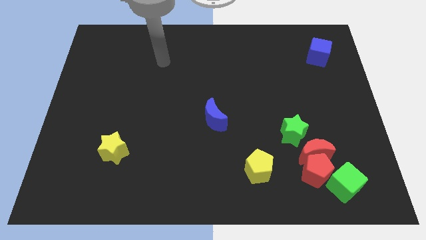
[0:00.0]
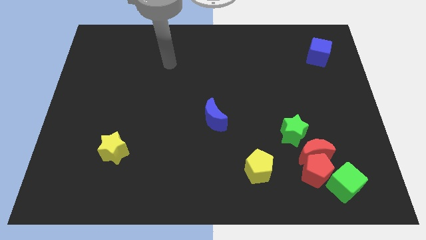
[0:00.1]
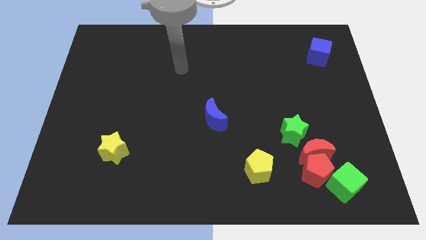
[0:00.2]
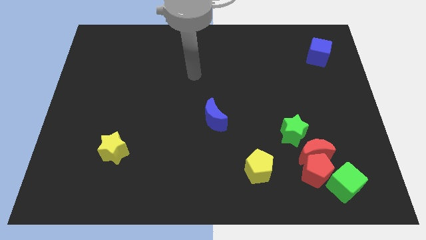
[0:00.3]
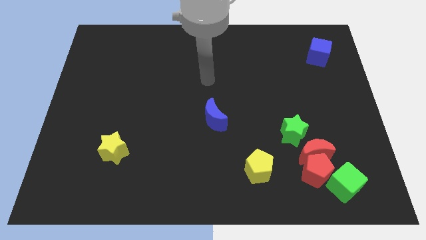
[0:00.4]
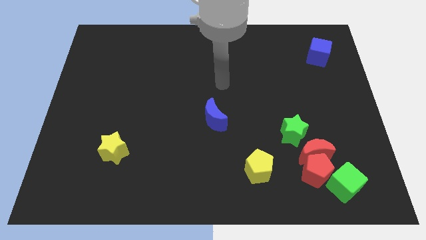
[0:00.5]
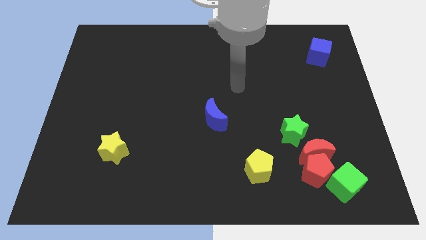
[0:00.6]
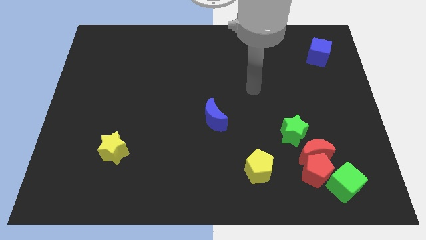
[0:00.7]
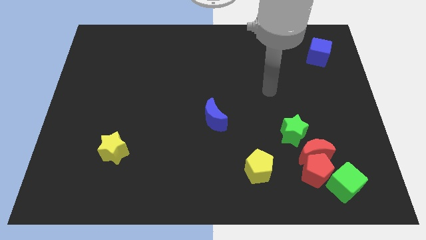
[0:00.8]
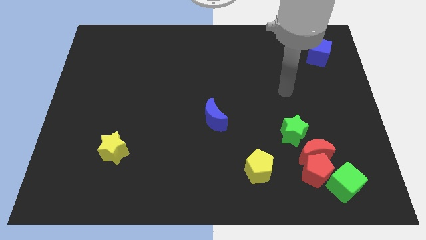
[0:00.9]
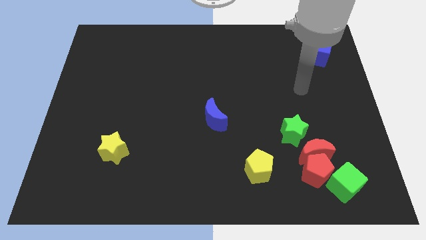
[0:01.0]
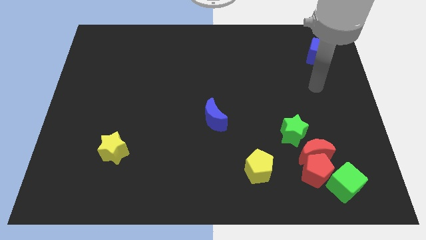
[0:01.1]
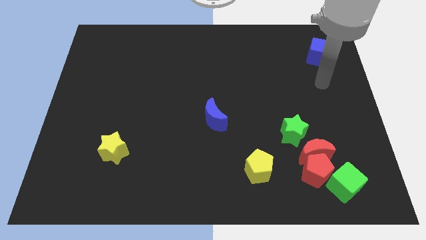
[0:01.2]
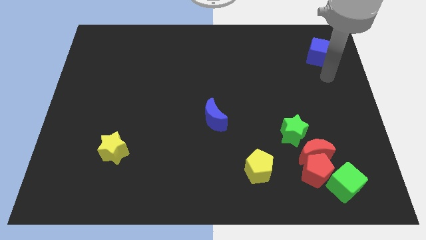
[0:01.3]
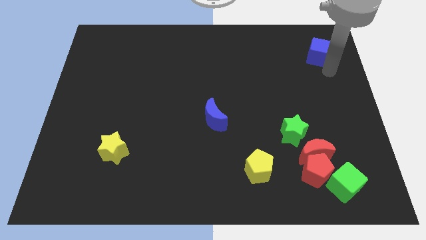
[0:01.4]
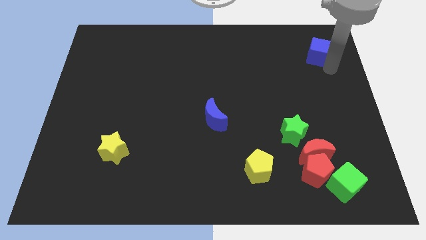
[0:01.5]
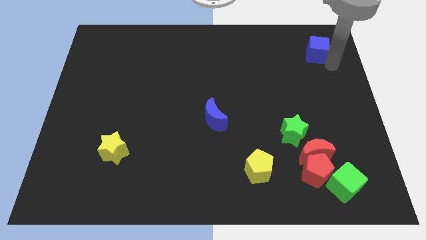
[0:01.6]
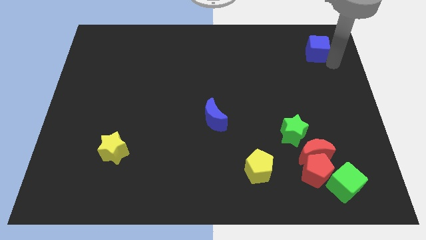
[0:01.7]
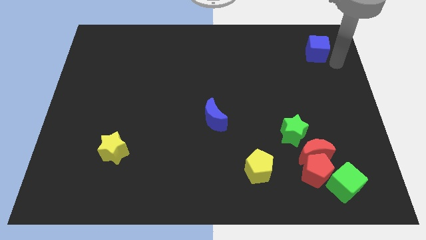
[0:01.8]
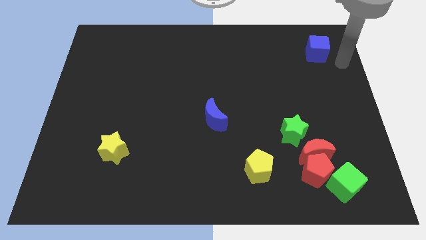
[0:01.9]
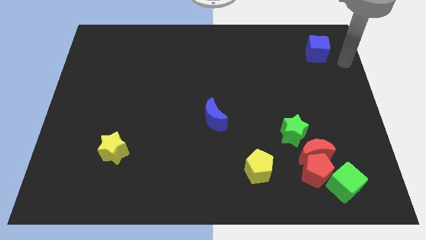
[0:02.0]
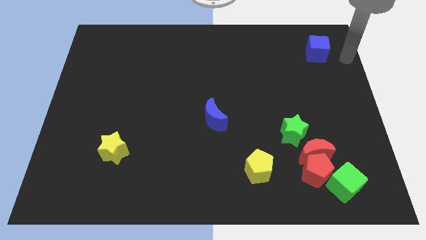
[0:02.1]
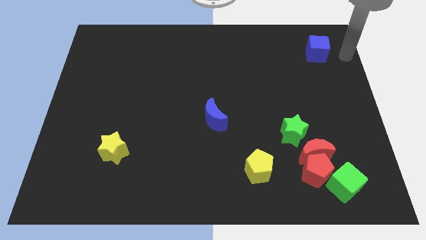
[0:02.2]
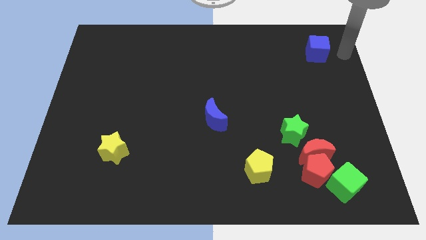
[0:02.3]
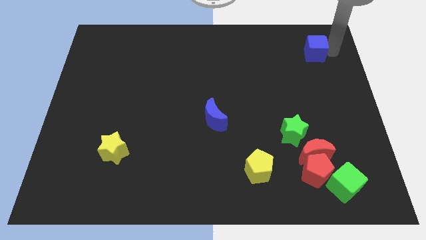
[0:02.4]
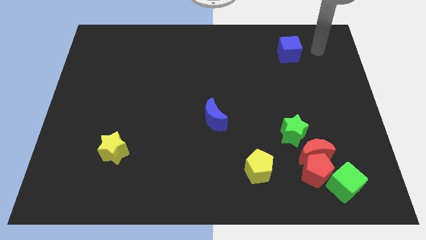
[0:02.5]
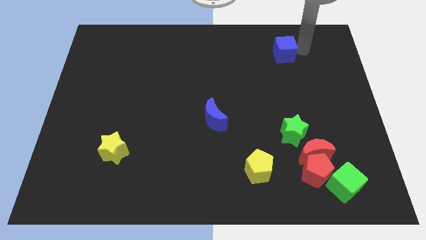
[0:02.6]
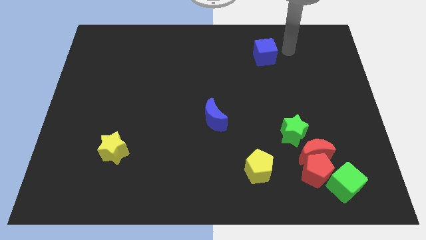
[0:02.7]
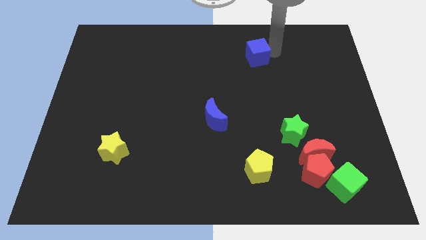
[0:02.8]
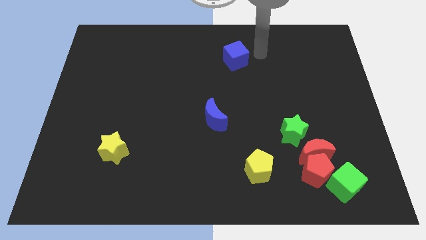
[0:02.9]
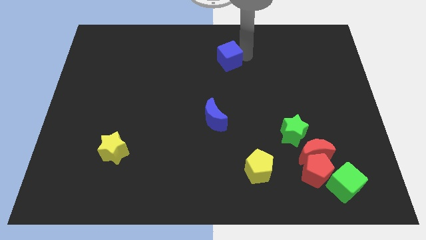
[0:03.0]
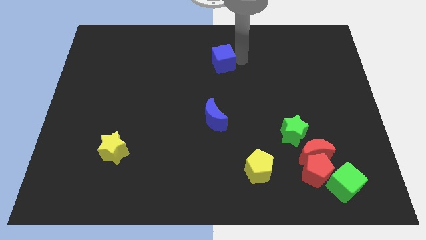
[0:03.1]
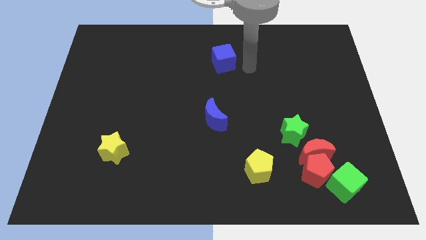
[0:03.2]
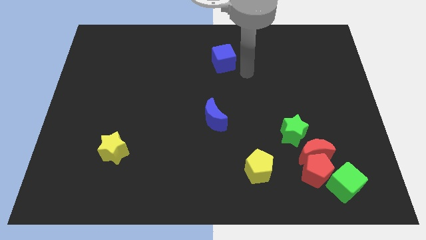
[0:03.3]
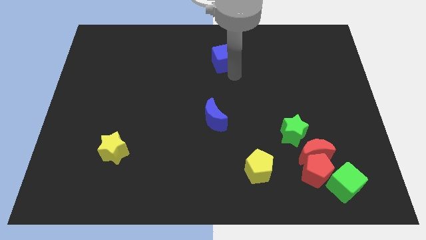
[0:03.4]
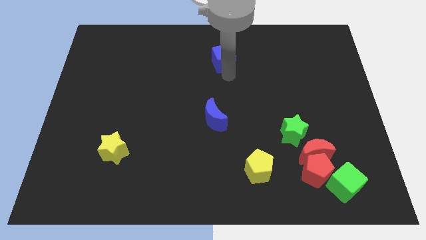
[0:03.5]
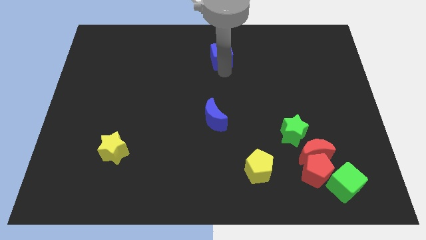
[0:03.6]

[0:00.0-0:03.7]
push the blue cube to the top side of the blue moon

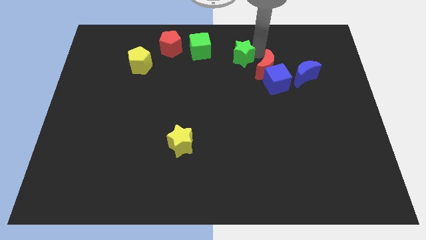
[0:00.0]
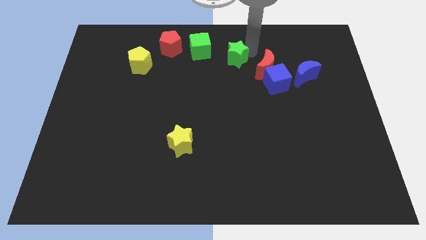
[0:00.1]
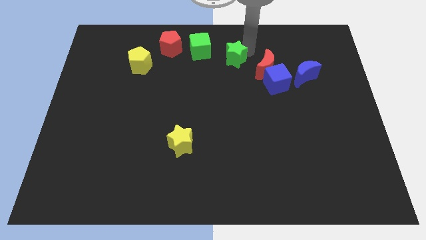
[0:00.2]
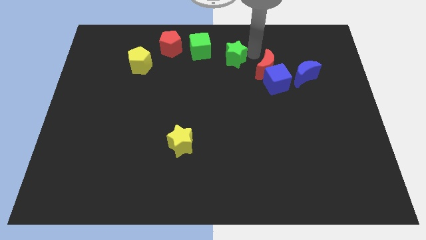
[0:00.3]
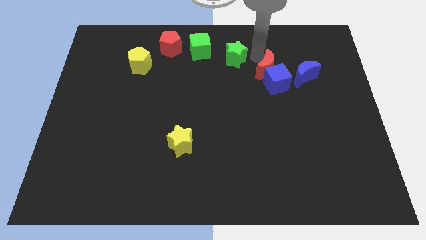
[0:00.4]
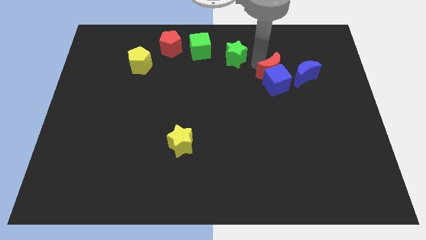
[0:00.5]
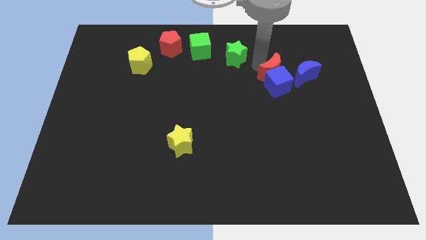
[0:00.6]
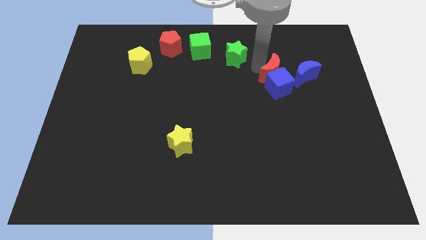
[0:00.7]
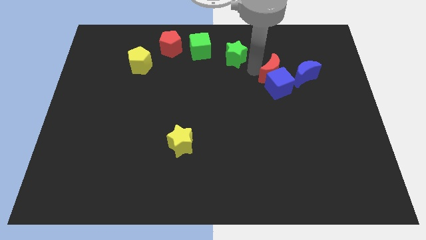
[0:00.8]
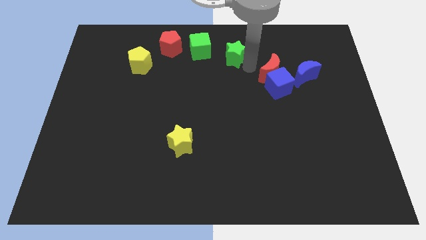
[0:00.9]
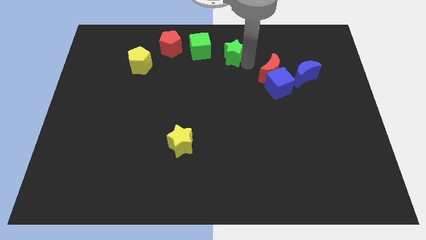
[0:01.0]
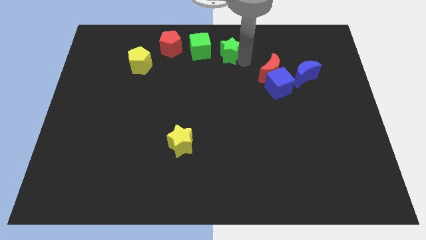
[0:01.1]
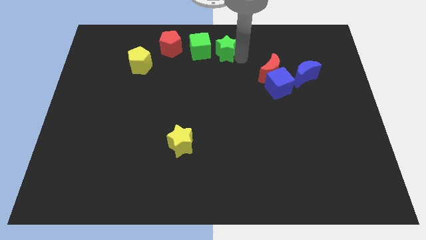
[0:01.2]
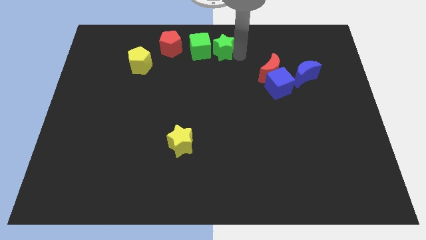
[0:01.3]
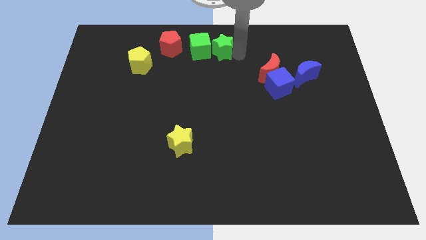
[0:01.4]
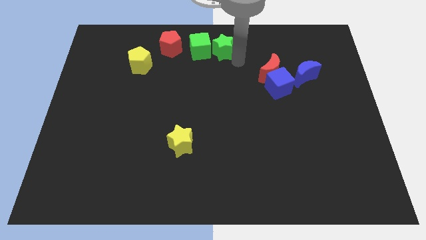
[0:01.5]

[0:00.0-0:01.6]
separate the green star from a group of blocks

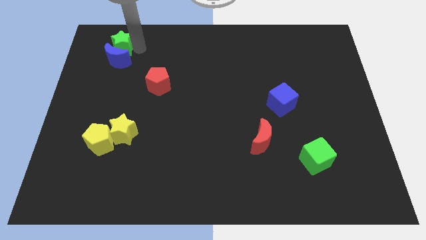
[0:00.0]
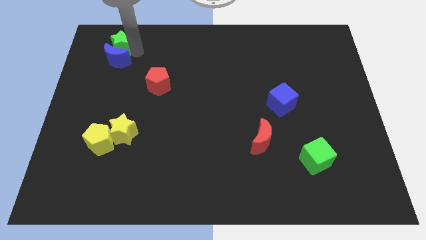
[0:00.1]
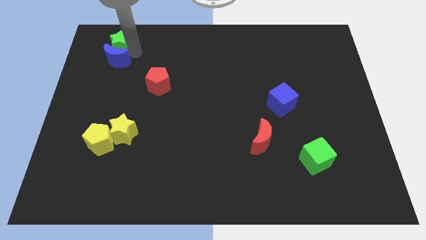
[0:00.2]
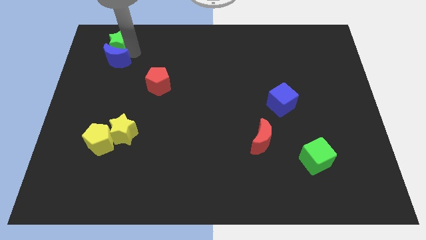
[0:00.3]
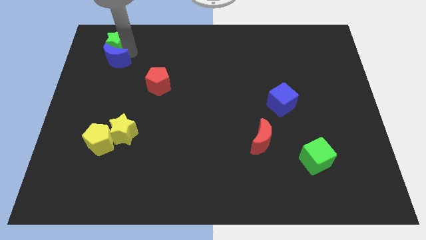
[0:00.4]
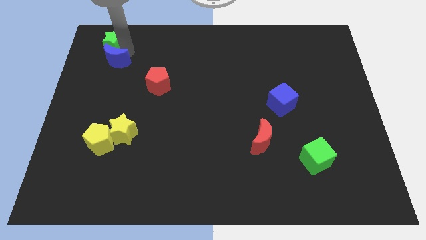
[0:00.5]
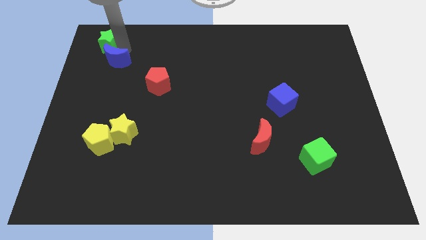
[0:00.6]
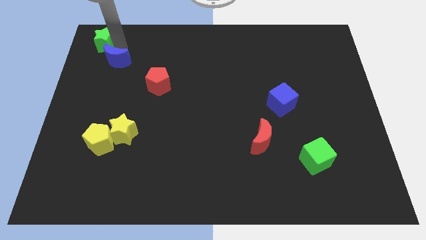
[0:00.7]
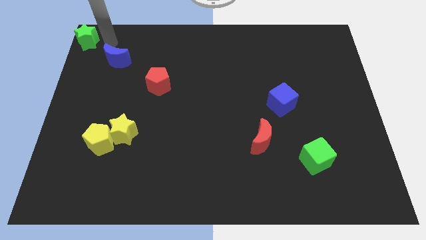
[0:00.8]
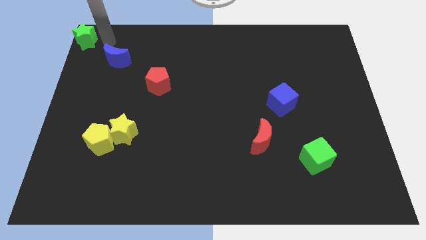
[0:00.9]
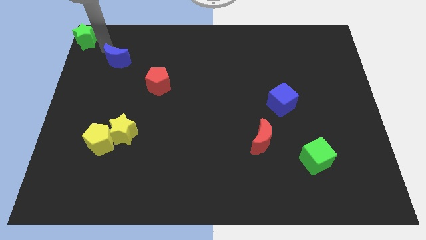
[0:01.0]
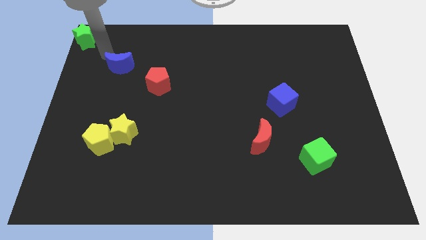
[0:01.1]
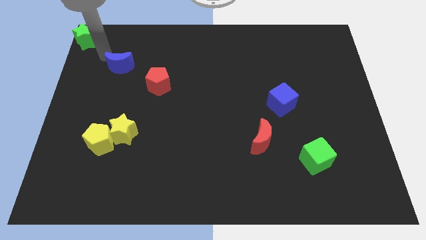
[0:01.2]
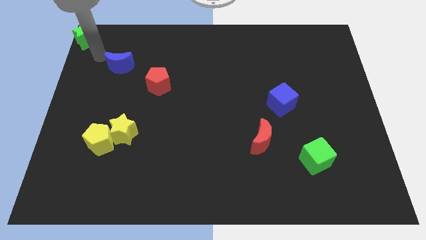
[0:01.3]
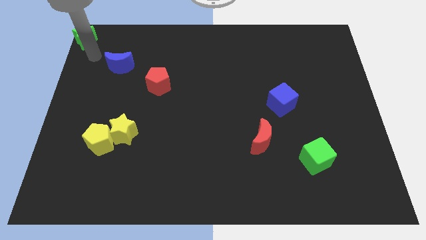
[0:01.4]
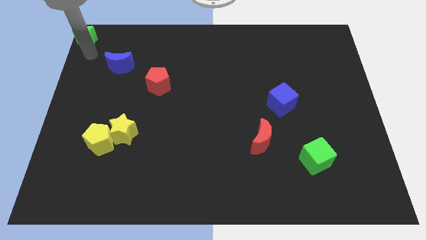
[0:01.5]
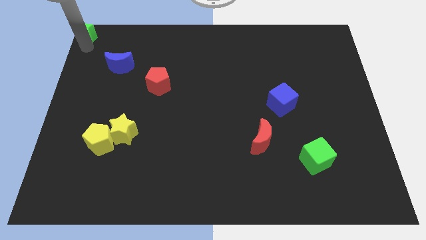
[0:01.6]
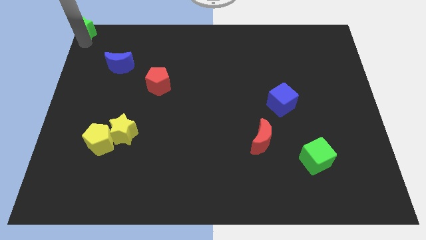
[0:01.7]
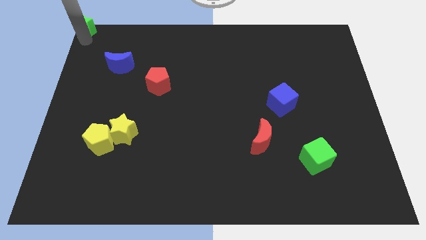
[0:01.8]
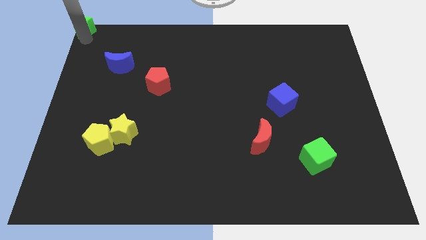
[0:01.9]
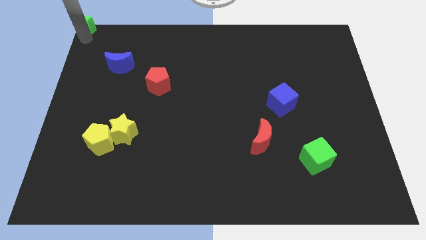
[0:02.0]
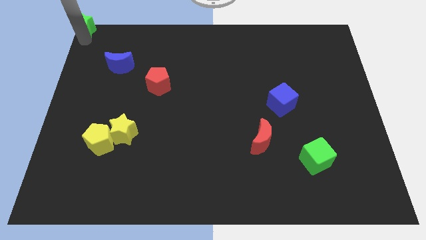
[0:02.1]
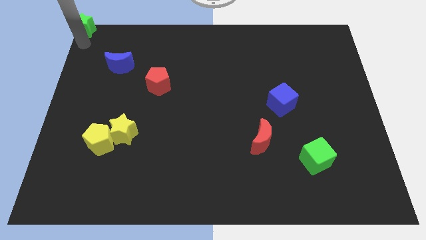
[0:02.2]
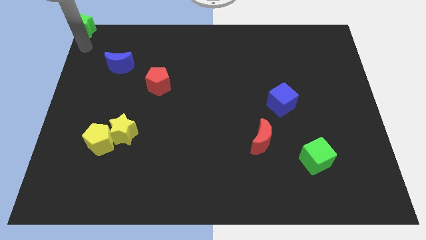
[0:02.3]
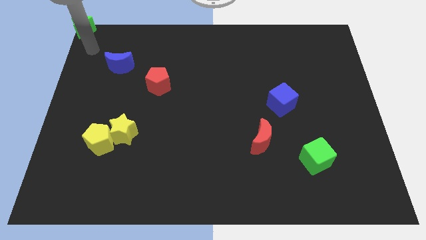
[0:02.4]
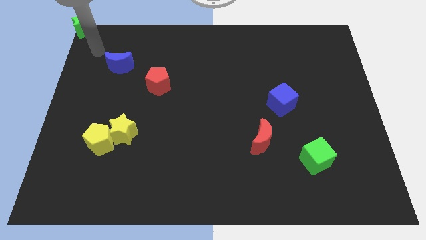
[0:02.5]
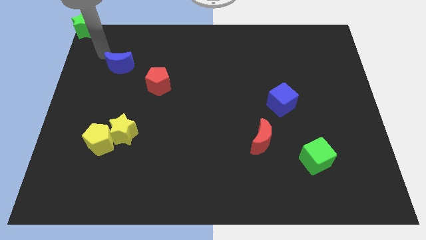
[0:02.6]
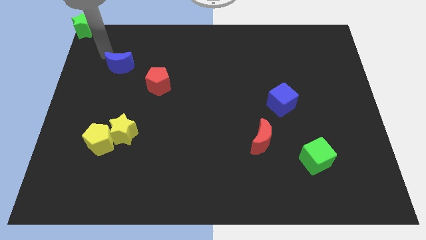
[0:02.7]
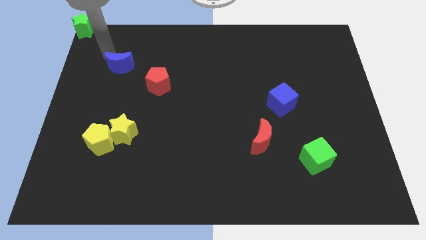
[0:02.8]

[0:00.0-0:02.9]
move green star to the top left corner of the board

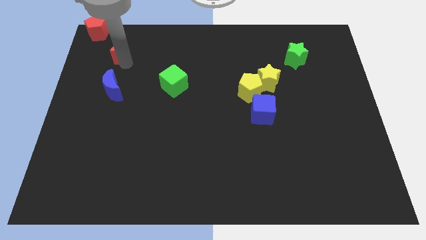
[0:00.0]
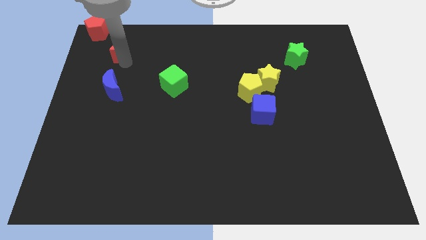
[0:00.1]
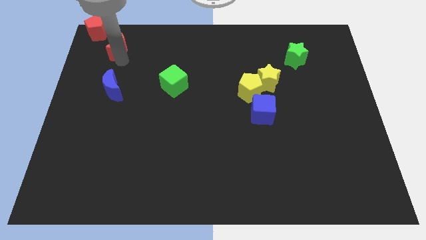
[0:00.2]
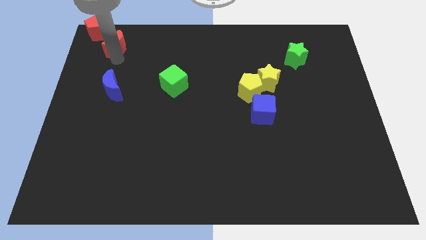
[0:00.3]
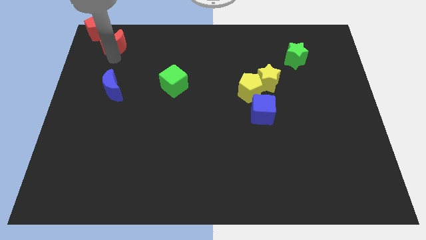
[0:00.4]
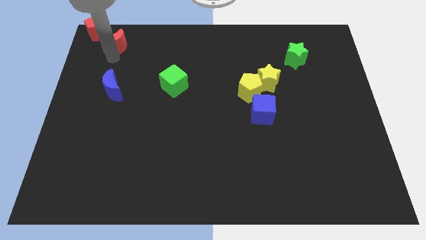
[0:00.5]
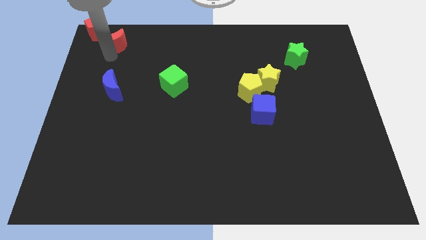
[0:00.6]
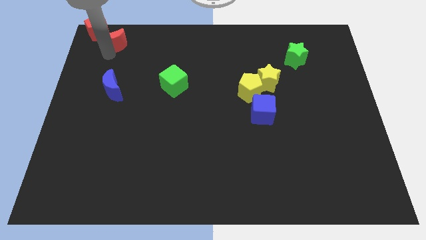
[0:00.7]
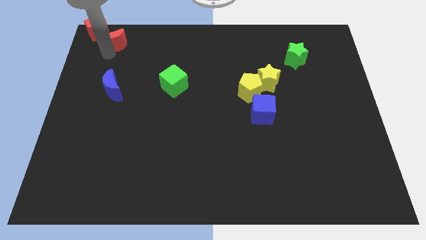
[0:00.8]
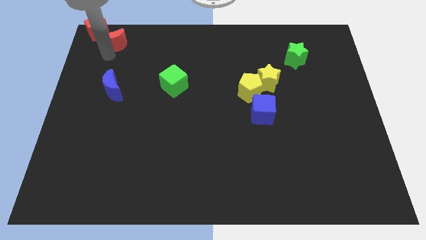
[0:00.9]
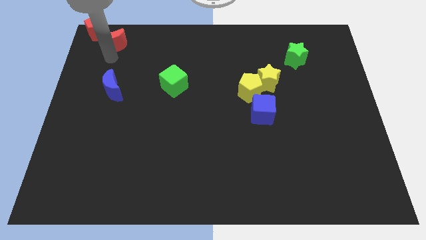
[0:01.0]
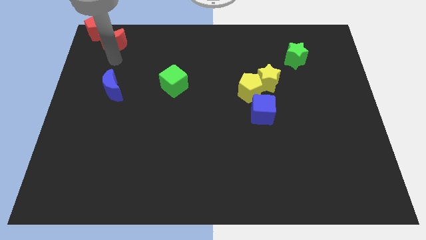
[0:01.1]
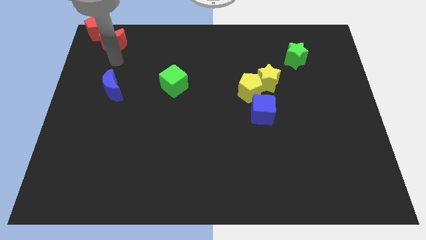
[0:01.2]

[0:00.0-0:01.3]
move the red crescent below the red pentagon
